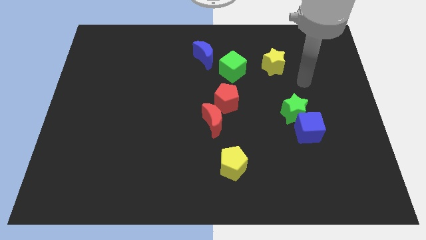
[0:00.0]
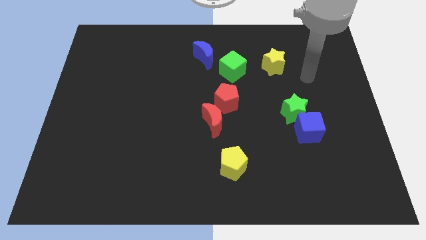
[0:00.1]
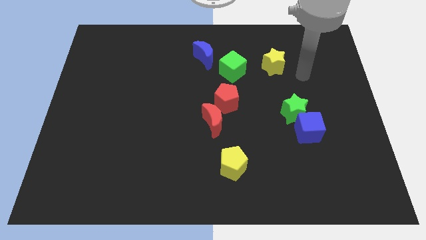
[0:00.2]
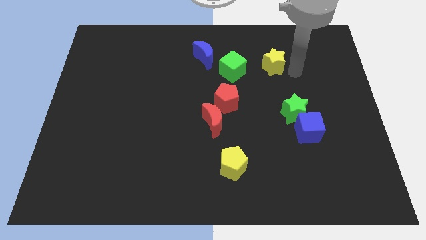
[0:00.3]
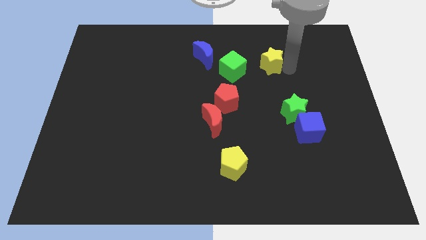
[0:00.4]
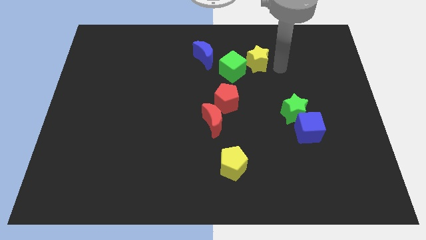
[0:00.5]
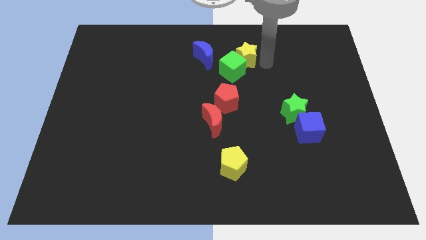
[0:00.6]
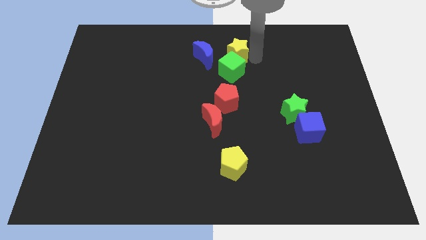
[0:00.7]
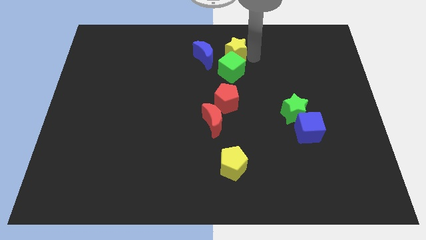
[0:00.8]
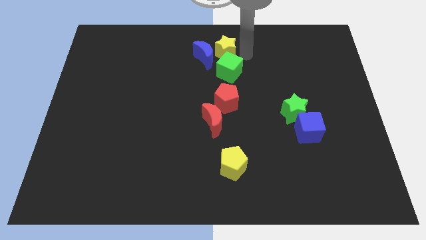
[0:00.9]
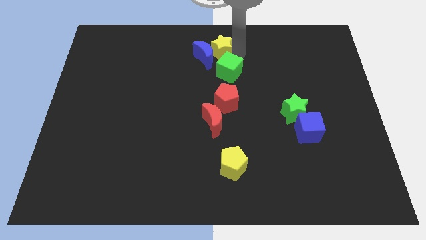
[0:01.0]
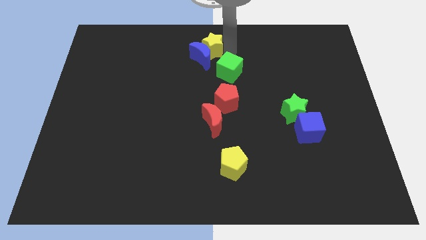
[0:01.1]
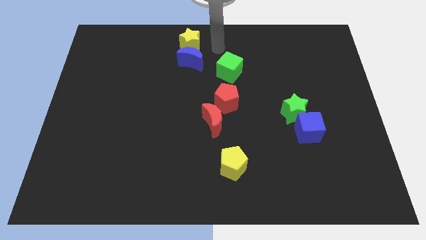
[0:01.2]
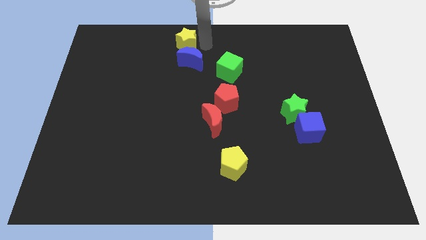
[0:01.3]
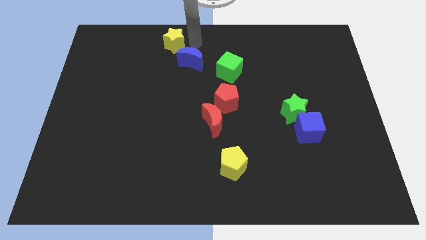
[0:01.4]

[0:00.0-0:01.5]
push the yellow star into the blue moon

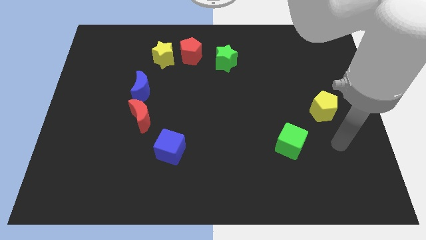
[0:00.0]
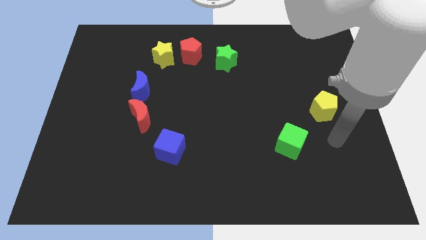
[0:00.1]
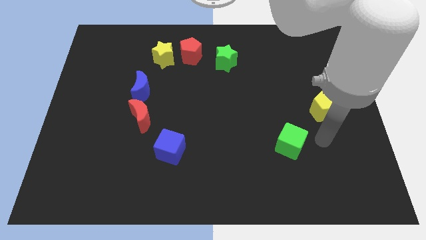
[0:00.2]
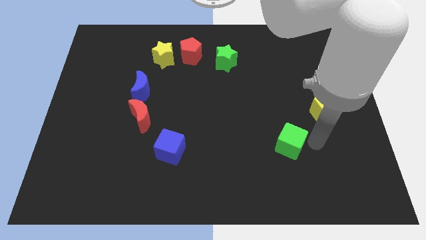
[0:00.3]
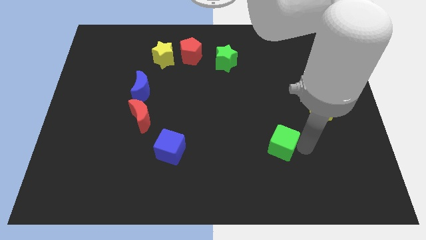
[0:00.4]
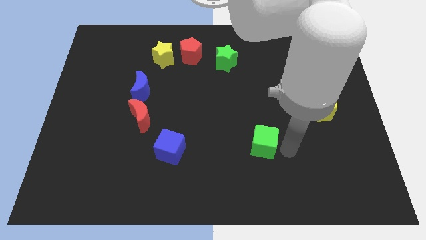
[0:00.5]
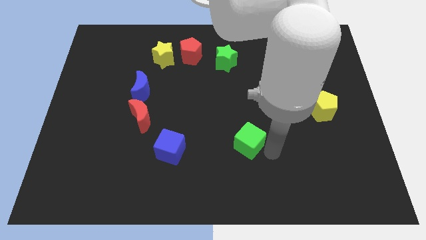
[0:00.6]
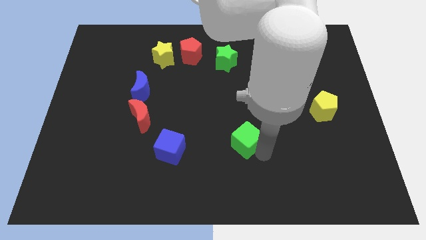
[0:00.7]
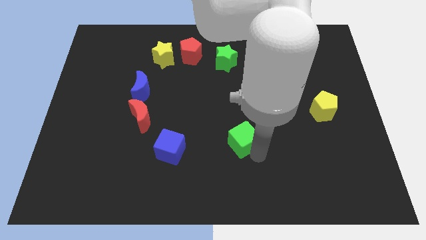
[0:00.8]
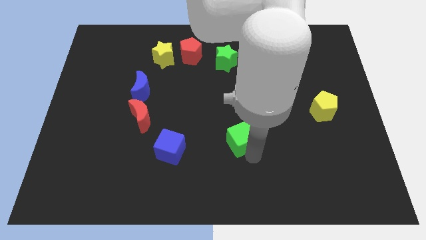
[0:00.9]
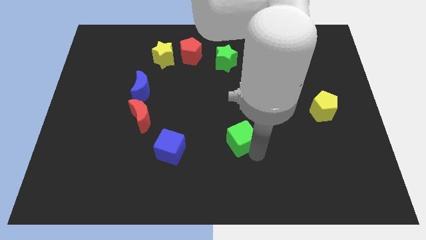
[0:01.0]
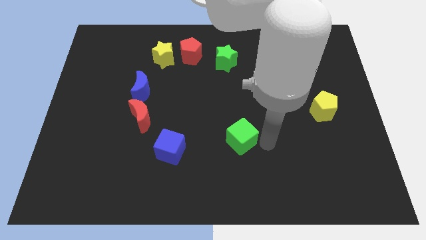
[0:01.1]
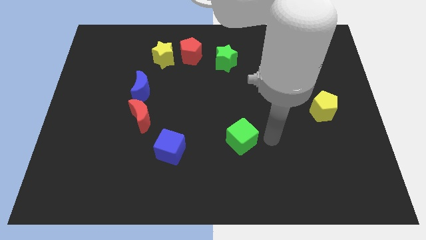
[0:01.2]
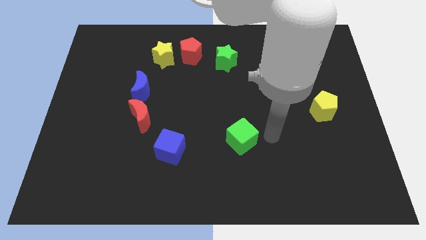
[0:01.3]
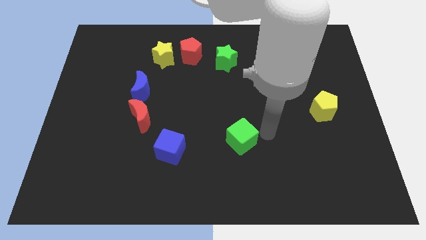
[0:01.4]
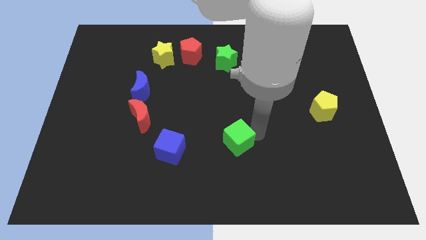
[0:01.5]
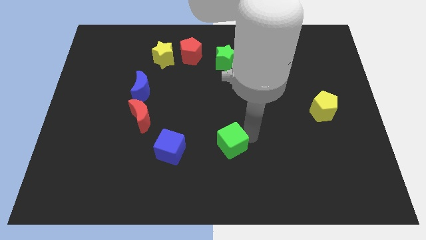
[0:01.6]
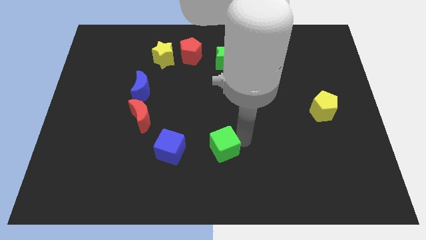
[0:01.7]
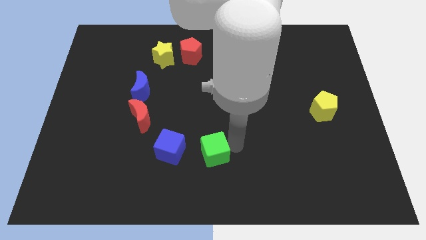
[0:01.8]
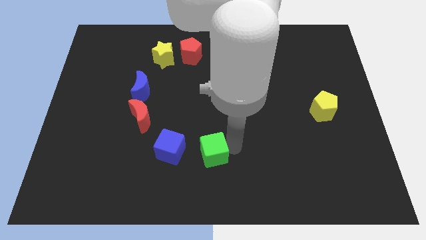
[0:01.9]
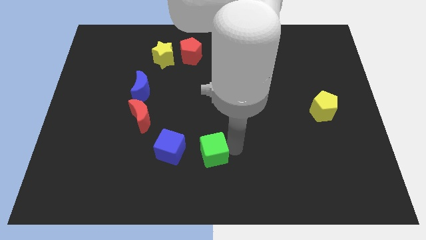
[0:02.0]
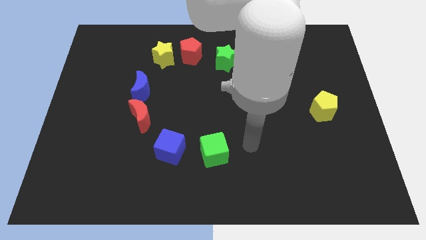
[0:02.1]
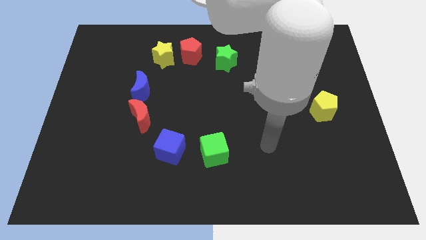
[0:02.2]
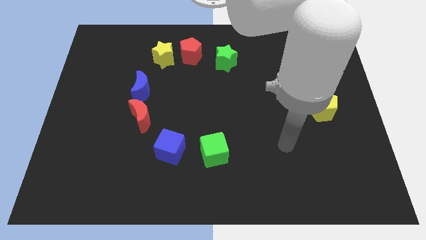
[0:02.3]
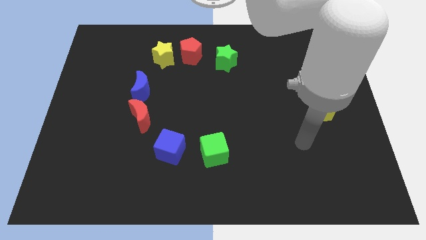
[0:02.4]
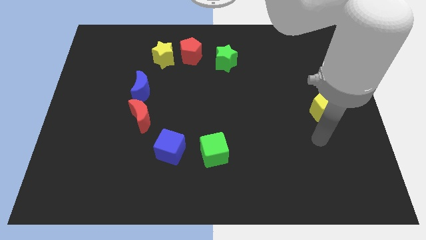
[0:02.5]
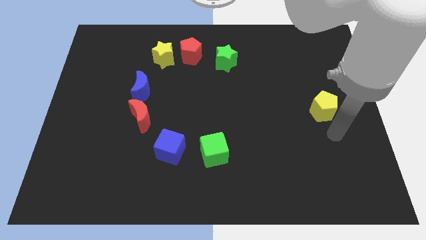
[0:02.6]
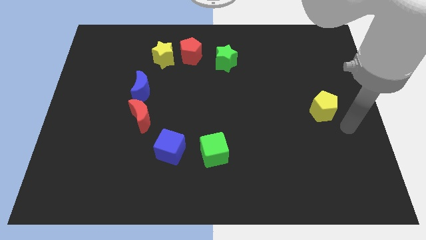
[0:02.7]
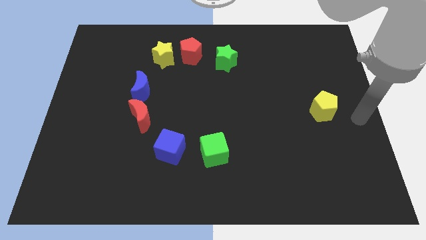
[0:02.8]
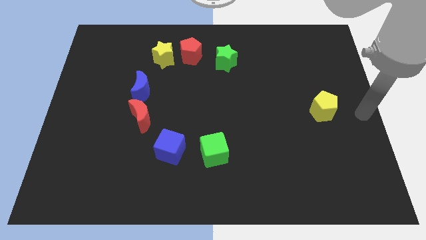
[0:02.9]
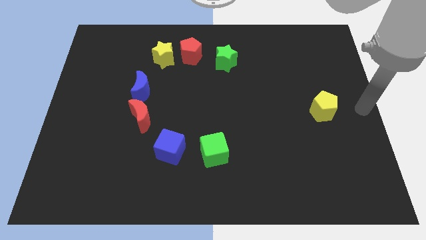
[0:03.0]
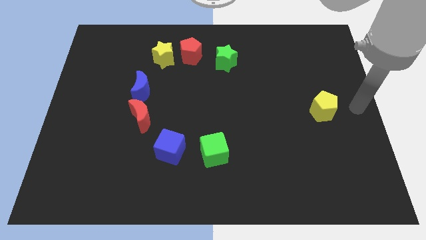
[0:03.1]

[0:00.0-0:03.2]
move the green cube slightly towards the blue cube

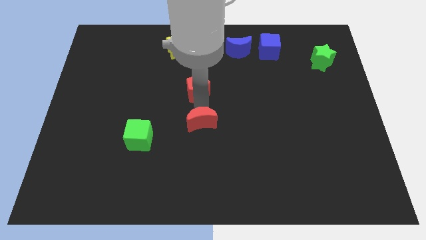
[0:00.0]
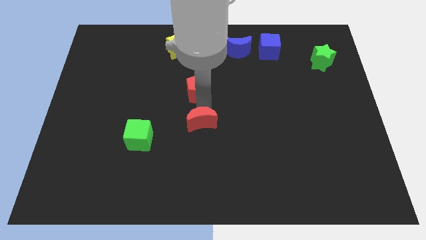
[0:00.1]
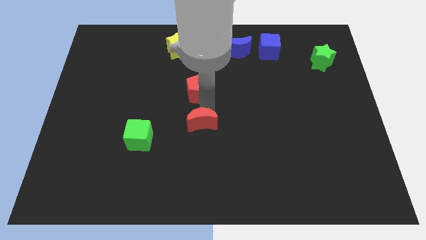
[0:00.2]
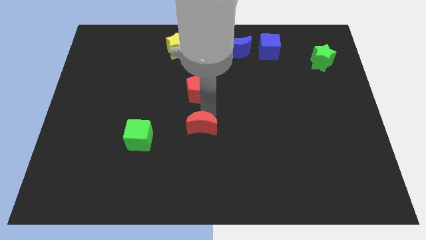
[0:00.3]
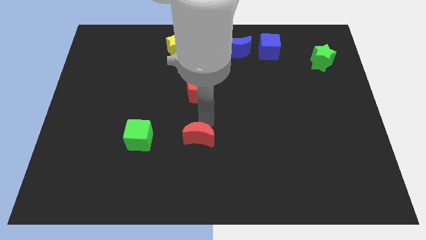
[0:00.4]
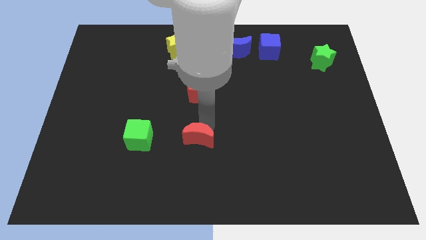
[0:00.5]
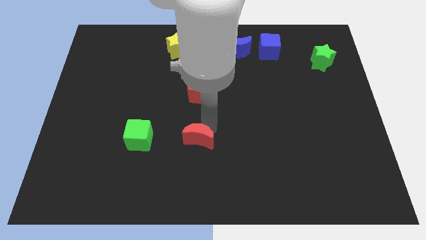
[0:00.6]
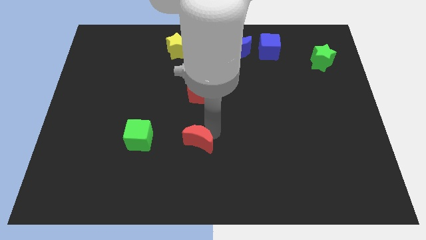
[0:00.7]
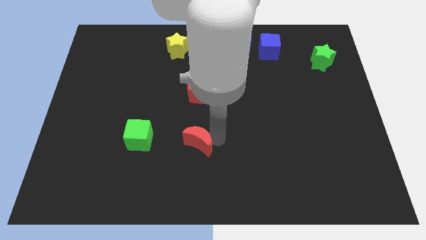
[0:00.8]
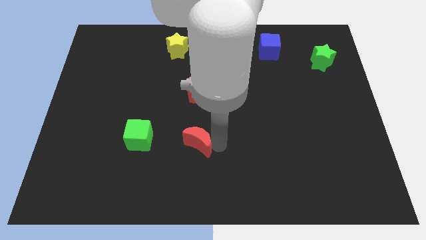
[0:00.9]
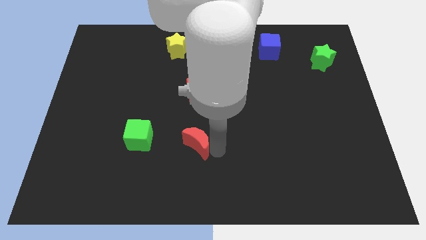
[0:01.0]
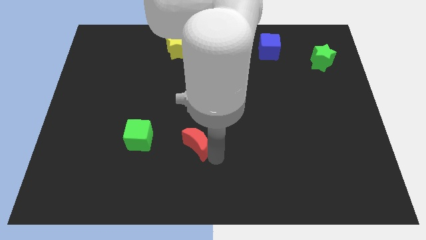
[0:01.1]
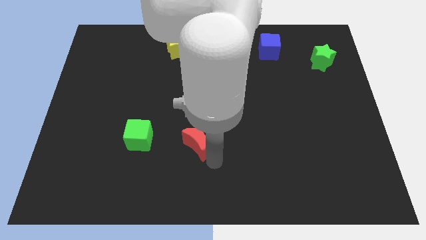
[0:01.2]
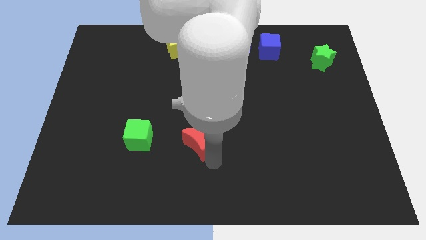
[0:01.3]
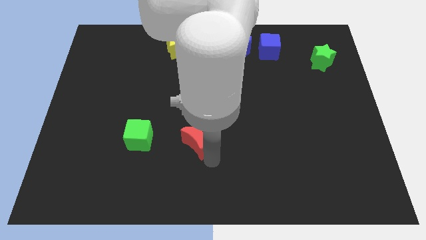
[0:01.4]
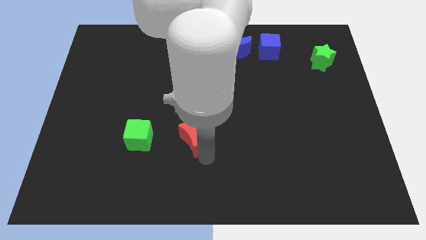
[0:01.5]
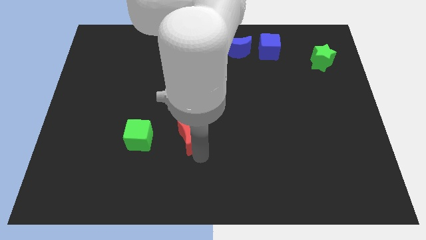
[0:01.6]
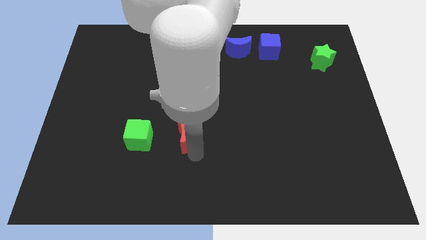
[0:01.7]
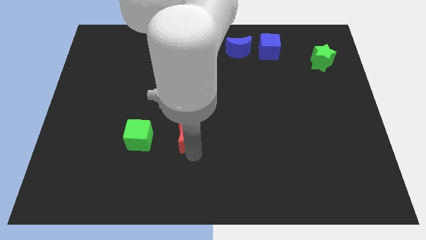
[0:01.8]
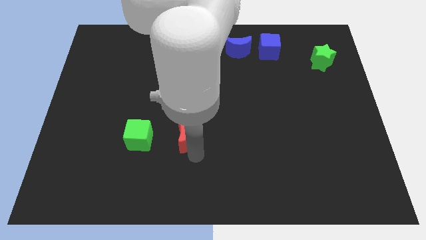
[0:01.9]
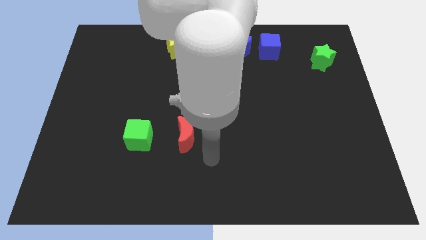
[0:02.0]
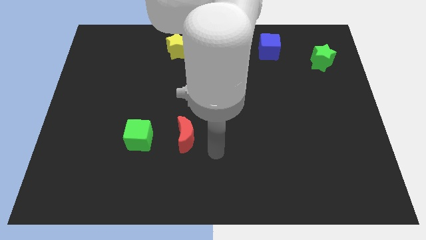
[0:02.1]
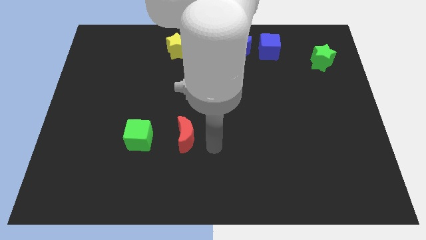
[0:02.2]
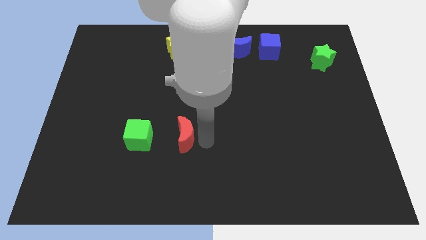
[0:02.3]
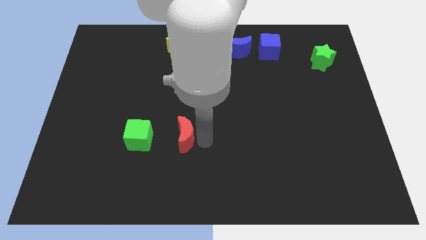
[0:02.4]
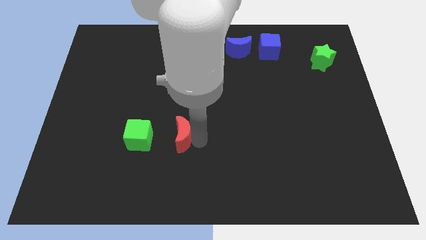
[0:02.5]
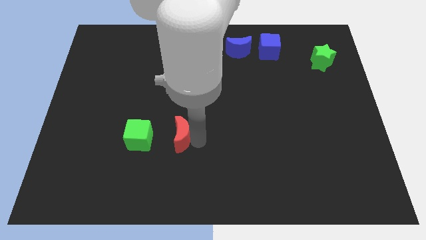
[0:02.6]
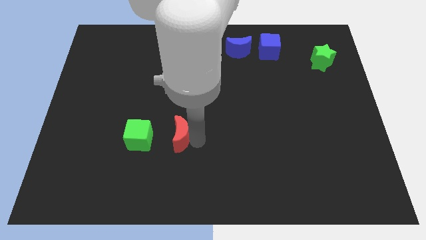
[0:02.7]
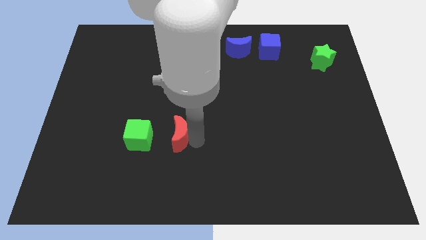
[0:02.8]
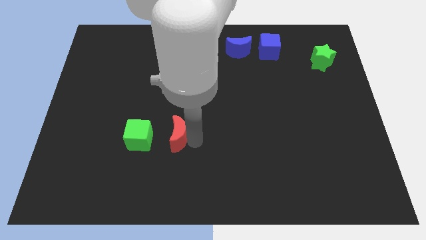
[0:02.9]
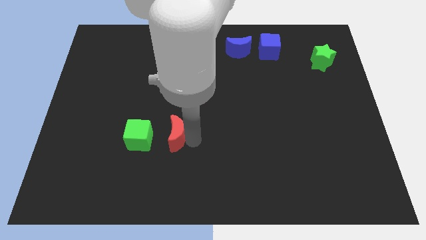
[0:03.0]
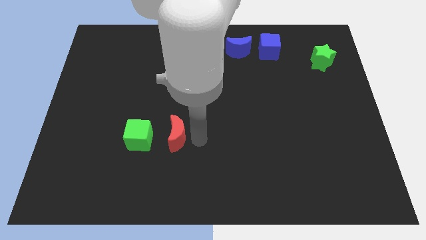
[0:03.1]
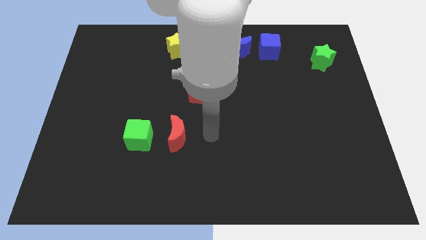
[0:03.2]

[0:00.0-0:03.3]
move the red crescent right to the green cube

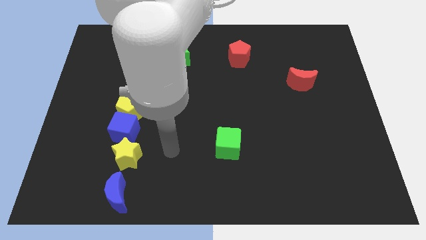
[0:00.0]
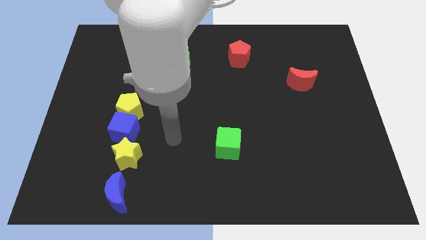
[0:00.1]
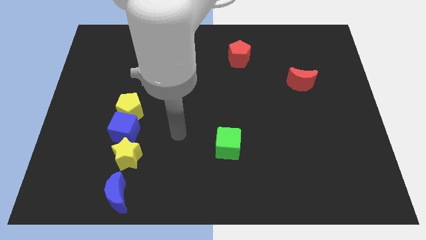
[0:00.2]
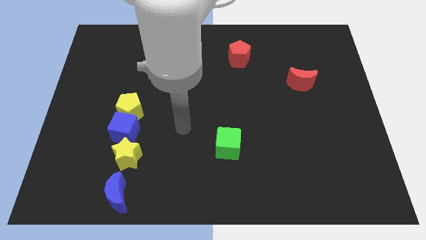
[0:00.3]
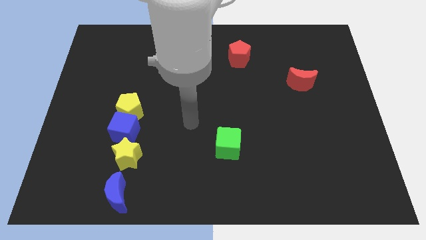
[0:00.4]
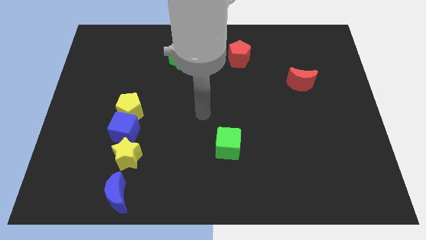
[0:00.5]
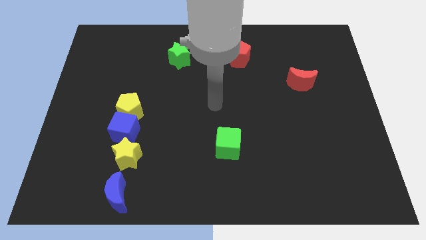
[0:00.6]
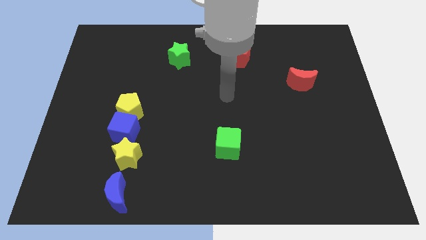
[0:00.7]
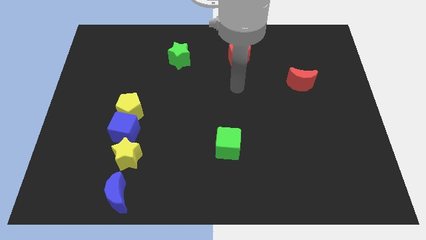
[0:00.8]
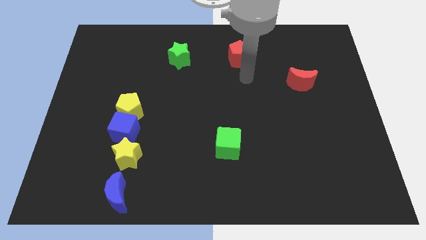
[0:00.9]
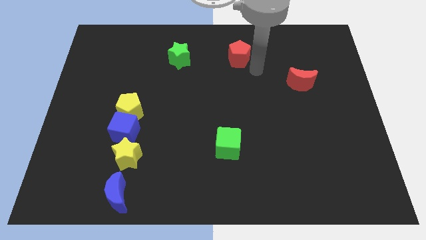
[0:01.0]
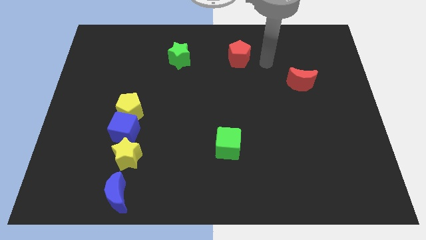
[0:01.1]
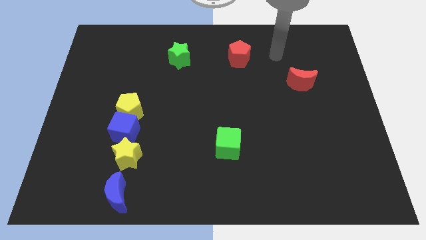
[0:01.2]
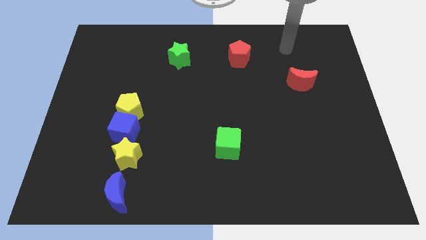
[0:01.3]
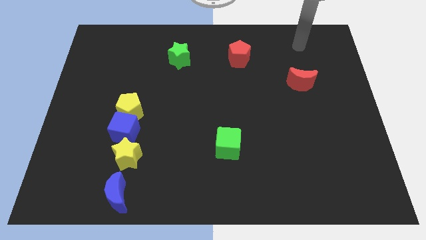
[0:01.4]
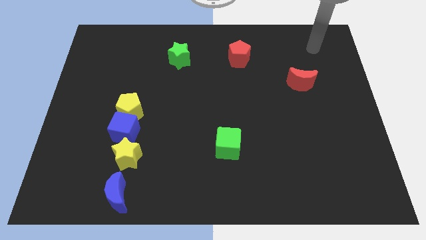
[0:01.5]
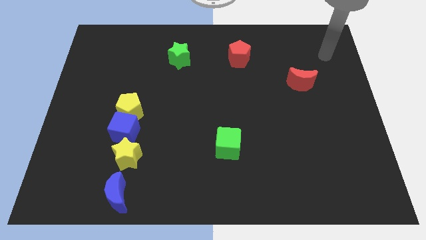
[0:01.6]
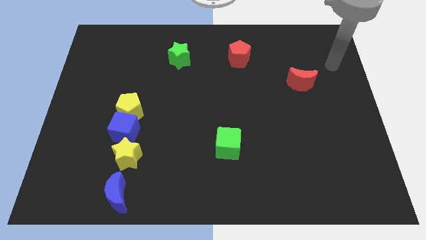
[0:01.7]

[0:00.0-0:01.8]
move your arm to the top right side of the red moon
